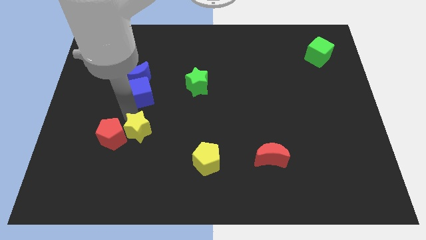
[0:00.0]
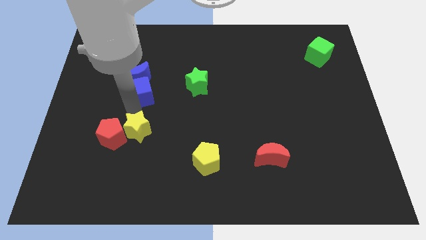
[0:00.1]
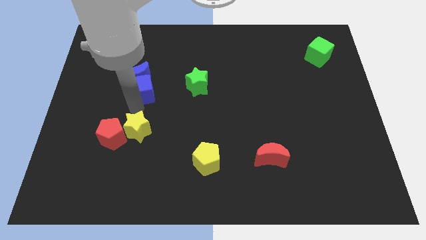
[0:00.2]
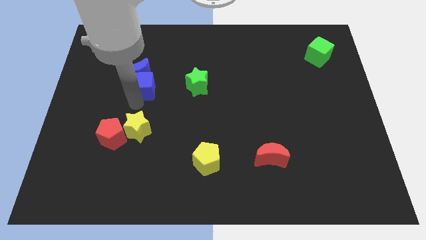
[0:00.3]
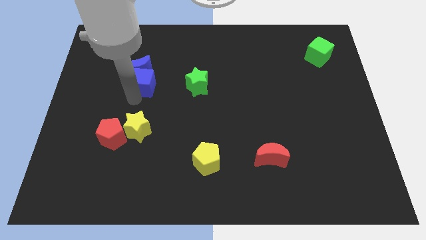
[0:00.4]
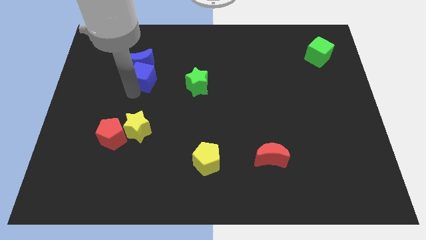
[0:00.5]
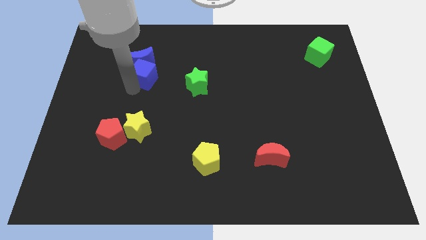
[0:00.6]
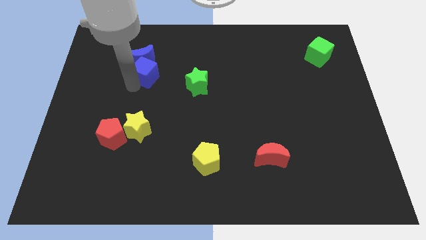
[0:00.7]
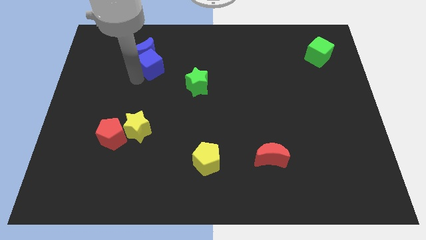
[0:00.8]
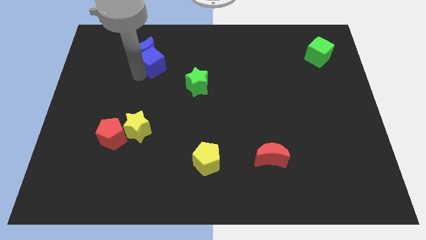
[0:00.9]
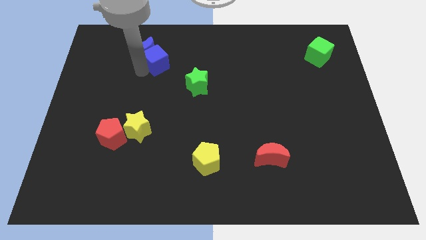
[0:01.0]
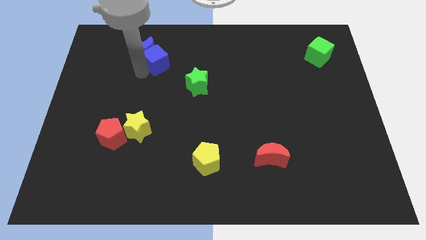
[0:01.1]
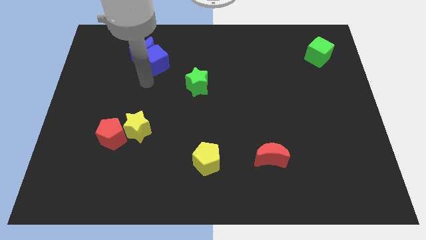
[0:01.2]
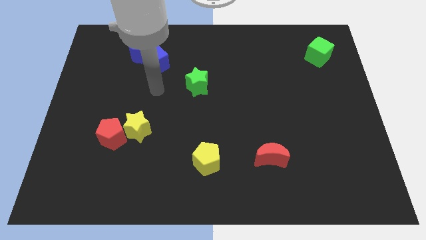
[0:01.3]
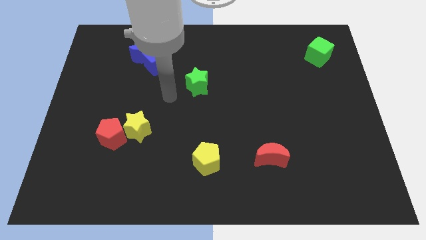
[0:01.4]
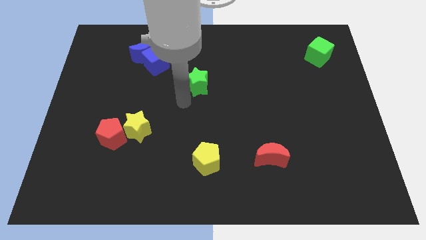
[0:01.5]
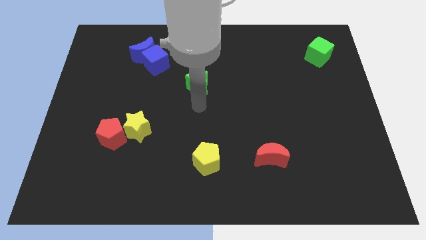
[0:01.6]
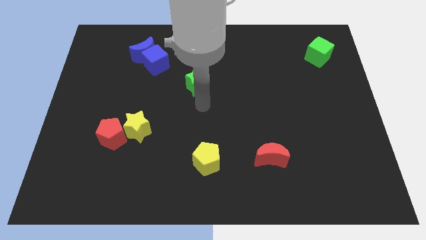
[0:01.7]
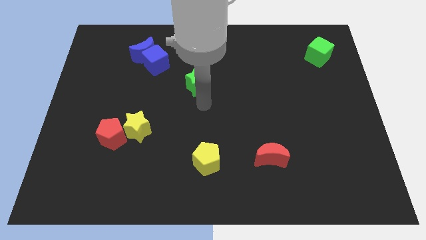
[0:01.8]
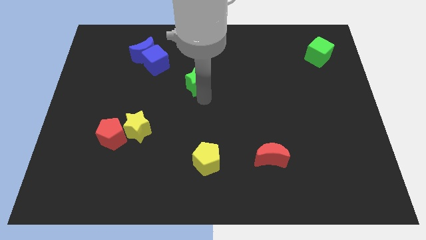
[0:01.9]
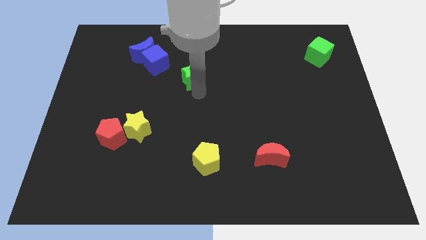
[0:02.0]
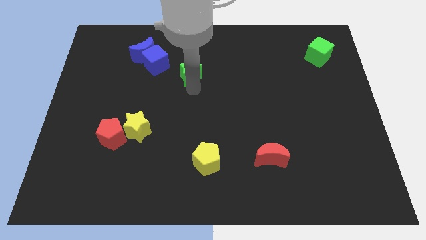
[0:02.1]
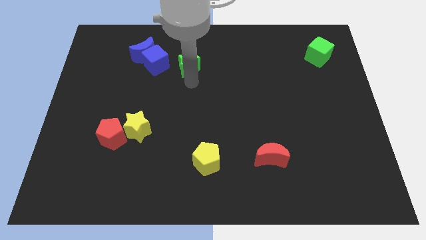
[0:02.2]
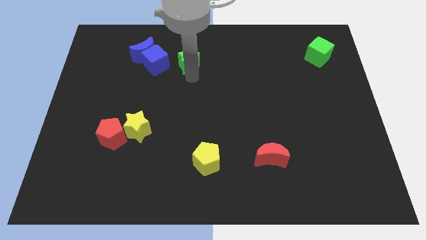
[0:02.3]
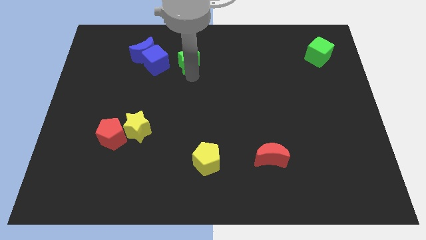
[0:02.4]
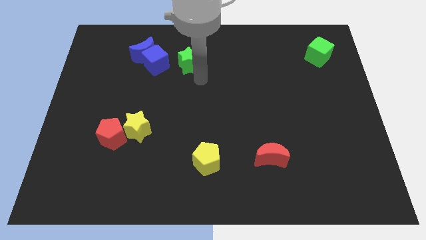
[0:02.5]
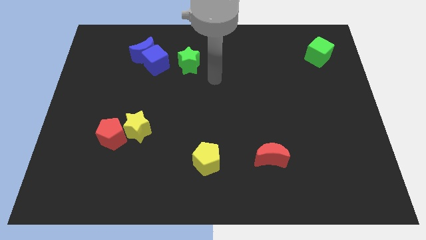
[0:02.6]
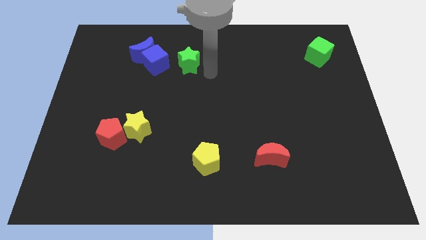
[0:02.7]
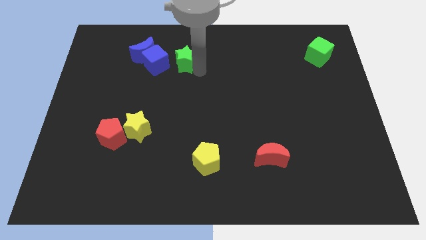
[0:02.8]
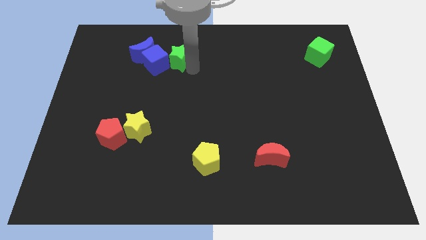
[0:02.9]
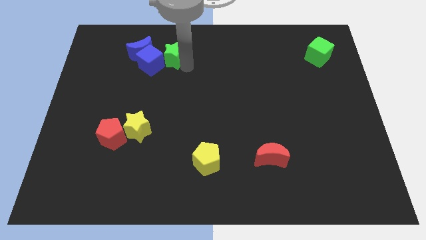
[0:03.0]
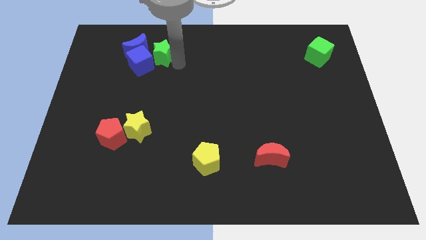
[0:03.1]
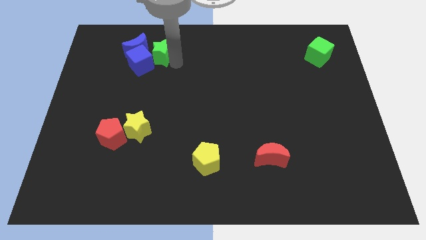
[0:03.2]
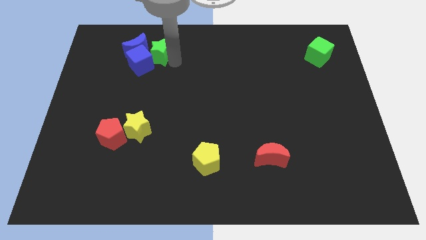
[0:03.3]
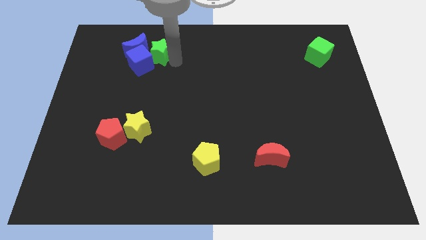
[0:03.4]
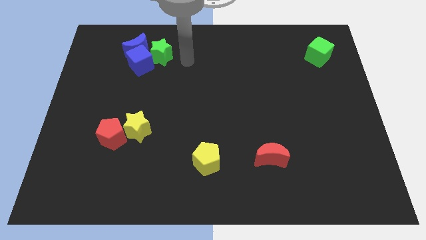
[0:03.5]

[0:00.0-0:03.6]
group up the green star with the blue blocks at the top side of the yellow star

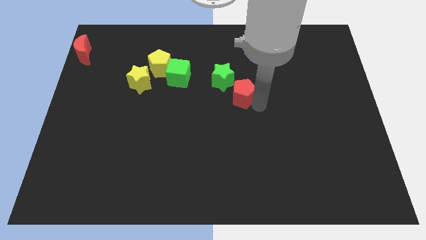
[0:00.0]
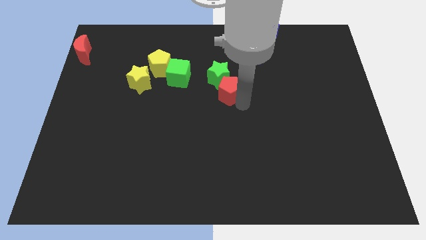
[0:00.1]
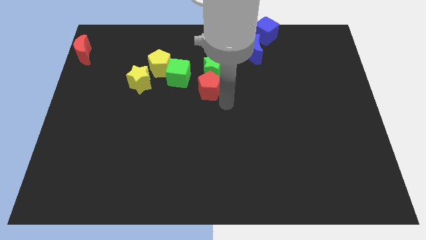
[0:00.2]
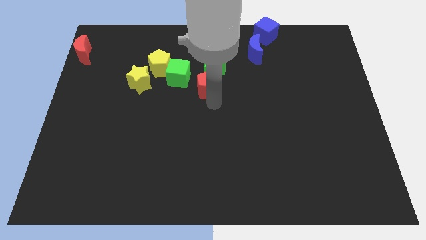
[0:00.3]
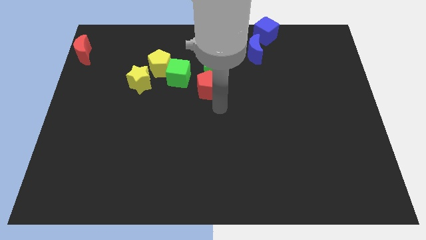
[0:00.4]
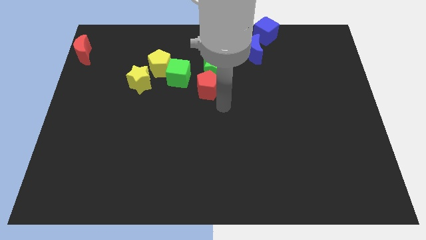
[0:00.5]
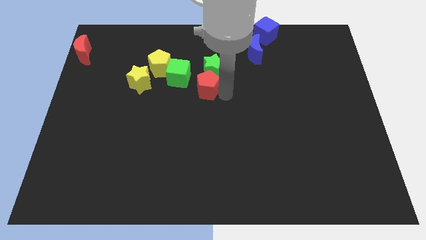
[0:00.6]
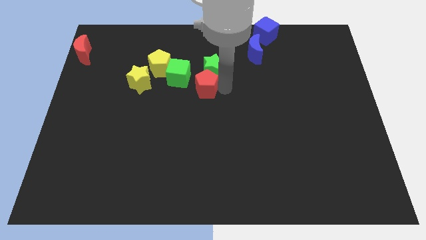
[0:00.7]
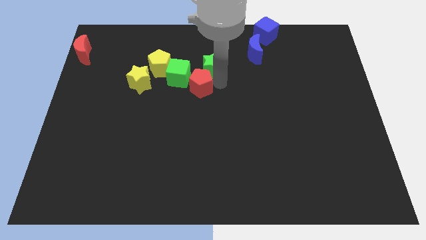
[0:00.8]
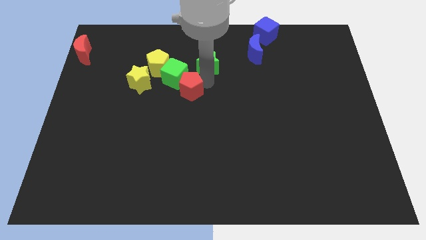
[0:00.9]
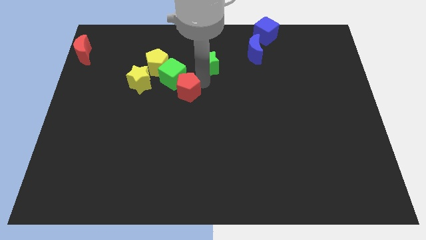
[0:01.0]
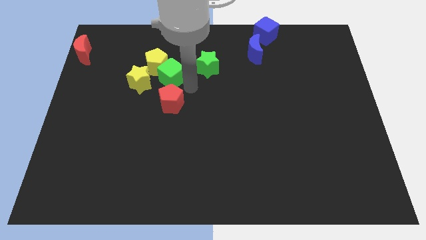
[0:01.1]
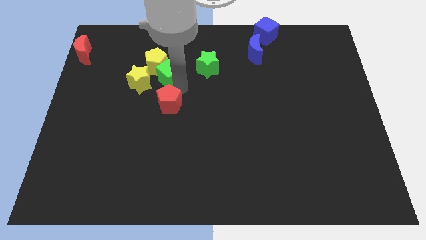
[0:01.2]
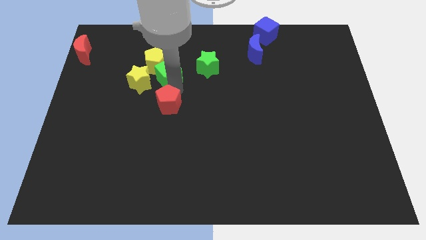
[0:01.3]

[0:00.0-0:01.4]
place the red pentagon below to the bottom left of the green cube

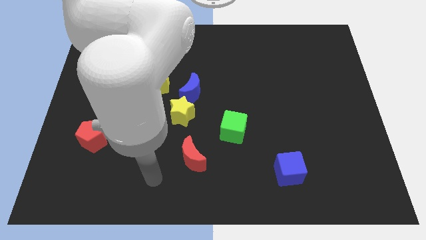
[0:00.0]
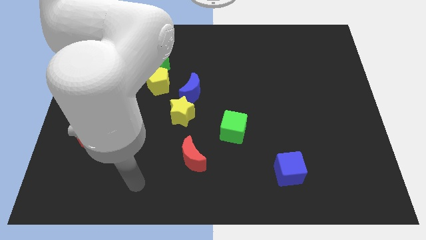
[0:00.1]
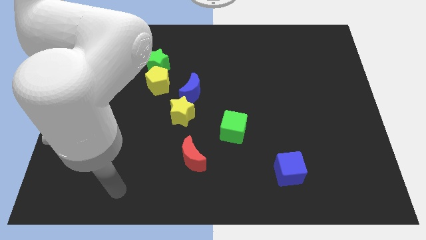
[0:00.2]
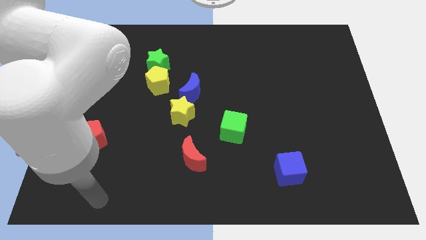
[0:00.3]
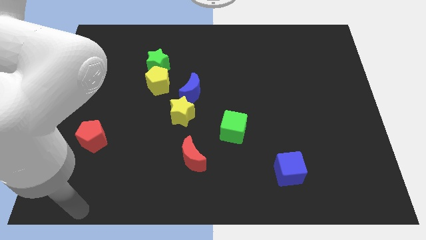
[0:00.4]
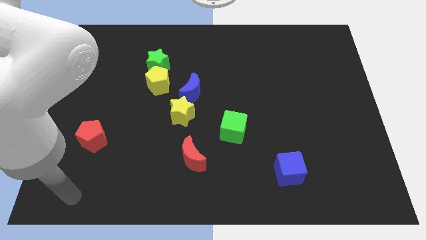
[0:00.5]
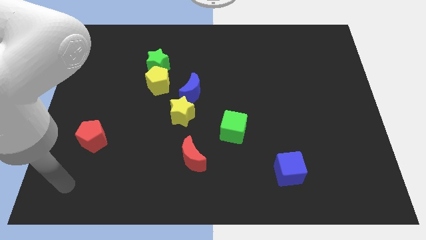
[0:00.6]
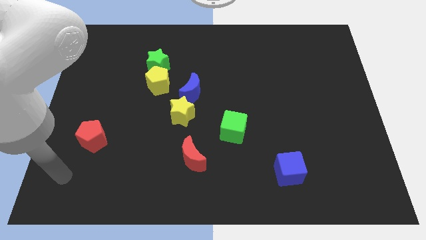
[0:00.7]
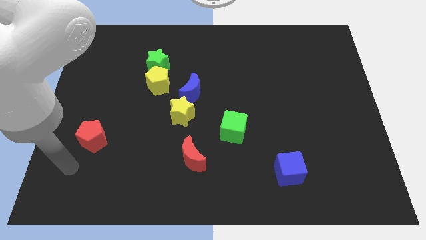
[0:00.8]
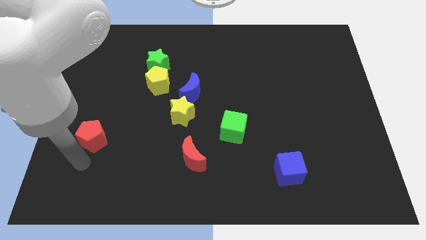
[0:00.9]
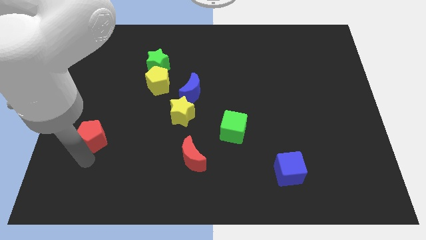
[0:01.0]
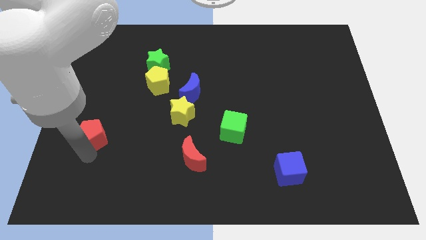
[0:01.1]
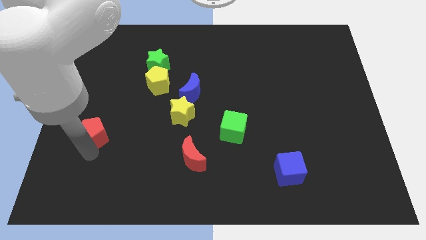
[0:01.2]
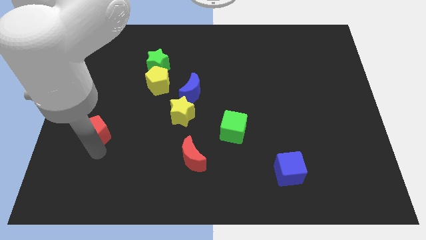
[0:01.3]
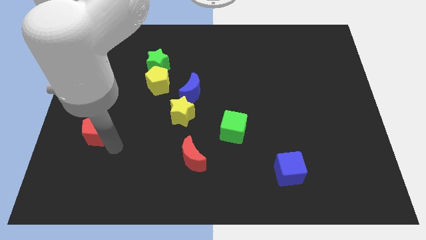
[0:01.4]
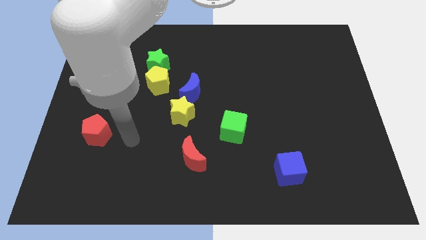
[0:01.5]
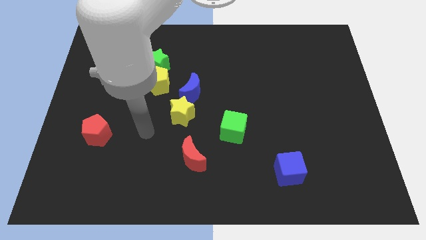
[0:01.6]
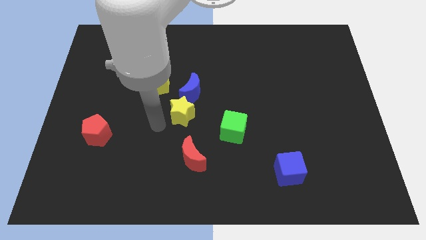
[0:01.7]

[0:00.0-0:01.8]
slightly push the red pentagon towards up

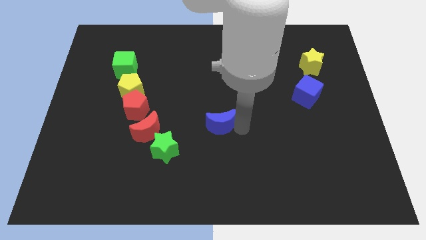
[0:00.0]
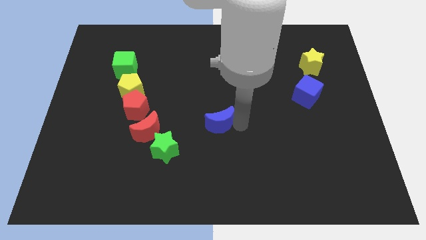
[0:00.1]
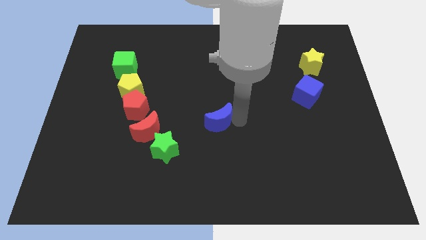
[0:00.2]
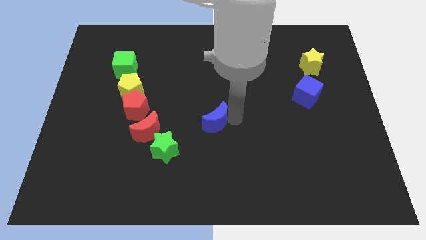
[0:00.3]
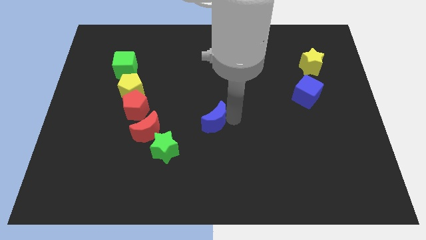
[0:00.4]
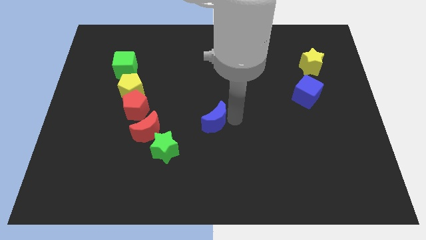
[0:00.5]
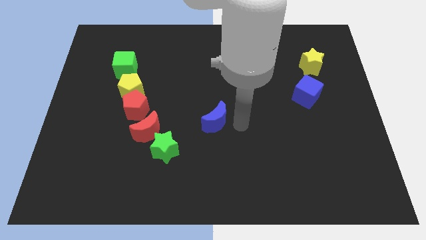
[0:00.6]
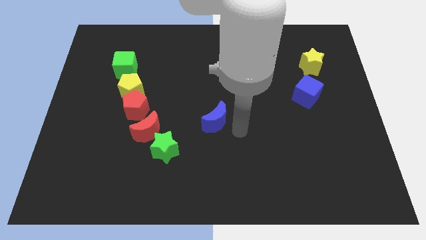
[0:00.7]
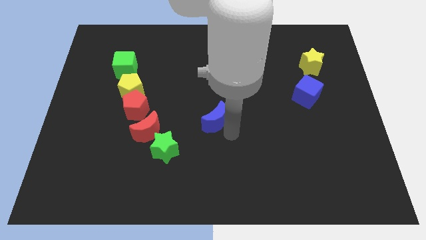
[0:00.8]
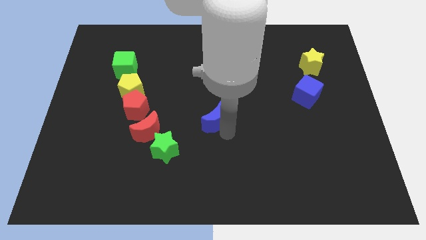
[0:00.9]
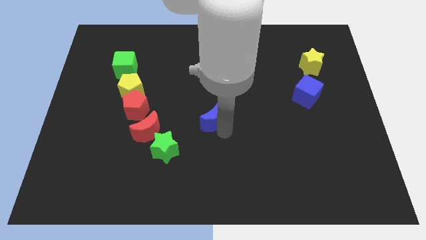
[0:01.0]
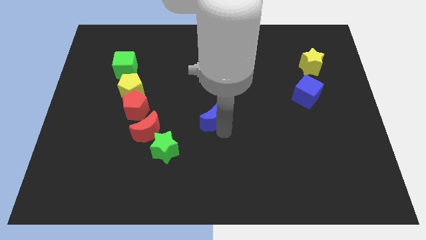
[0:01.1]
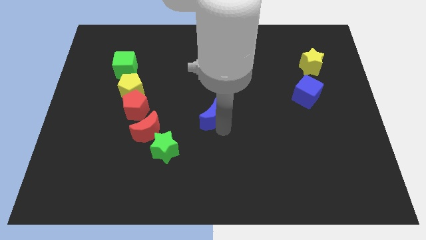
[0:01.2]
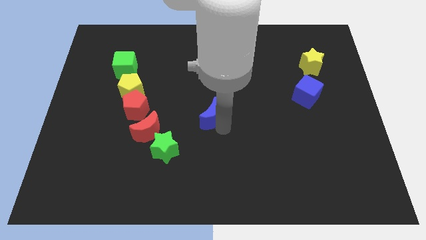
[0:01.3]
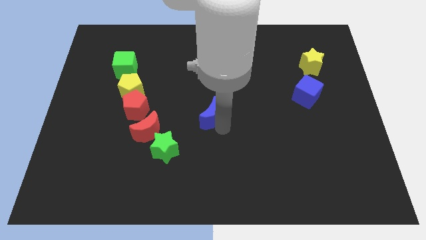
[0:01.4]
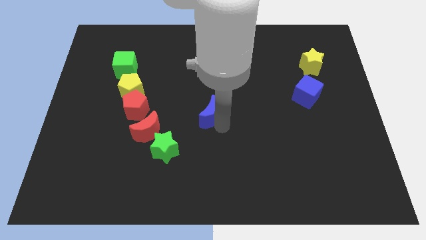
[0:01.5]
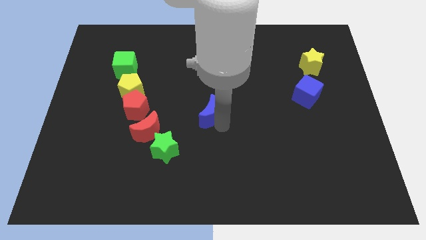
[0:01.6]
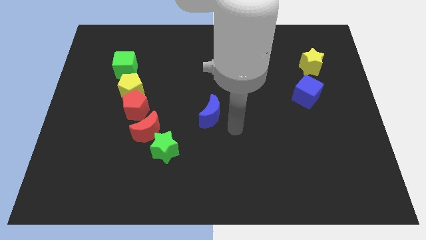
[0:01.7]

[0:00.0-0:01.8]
push blue crescent beside red crescent

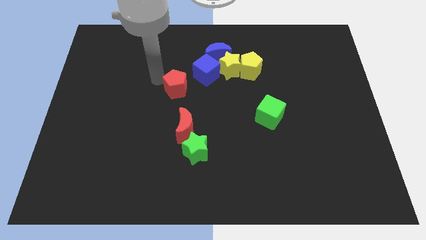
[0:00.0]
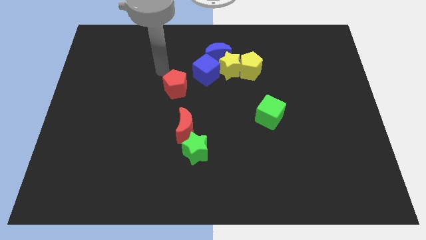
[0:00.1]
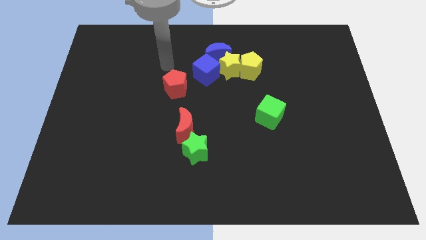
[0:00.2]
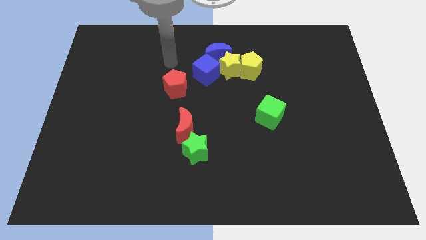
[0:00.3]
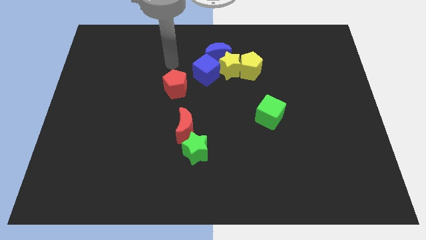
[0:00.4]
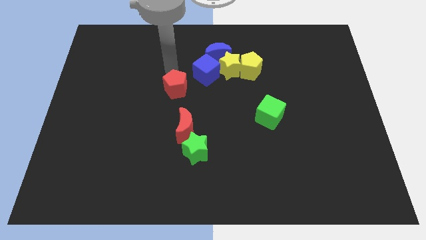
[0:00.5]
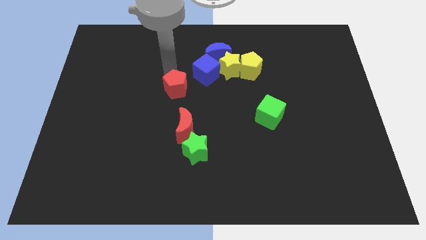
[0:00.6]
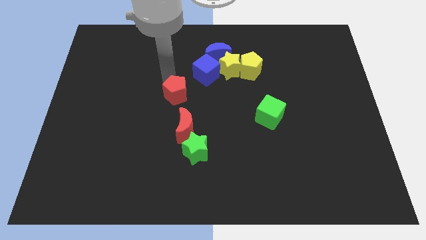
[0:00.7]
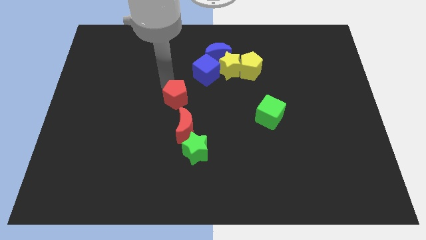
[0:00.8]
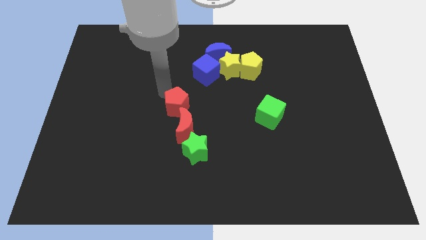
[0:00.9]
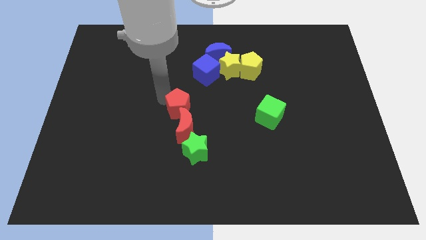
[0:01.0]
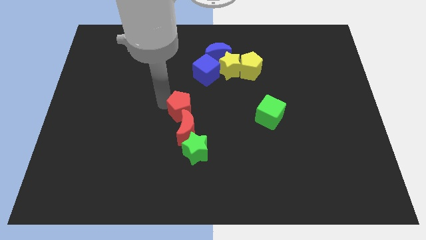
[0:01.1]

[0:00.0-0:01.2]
push the red pentagon into red crescent
